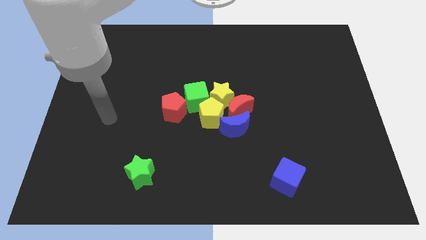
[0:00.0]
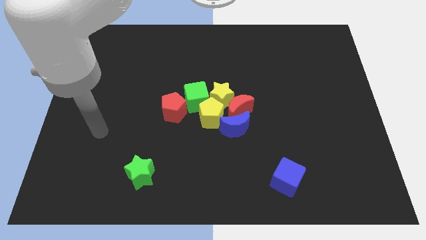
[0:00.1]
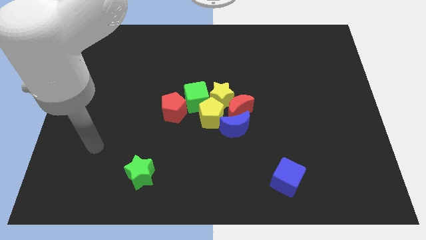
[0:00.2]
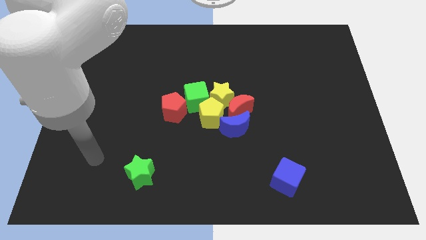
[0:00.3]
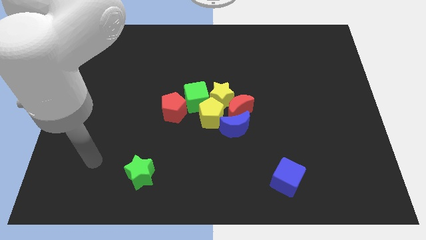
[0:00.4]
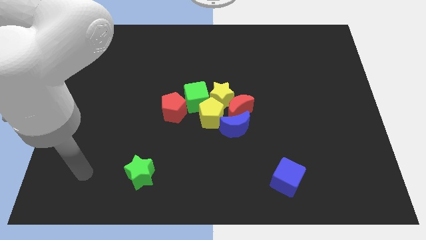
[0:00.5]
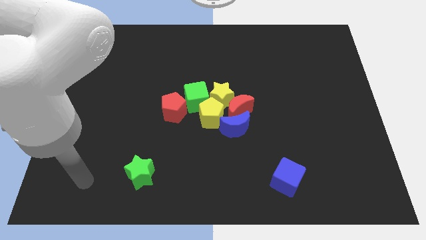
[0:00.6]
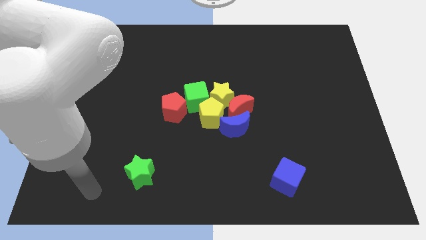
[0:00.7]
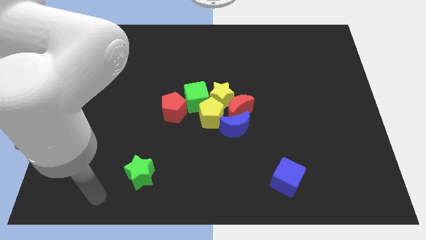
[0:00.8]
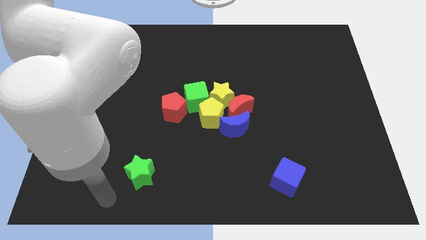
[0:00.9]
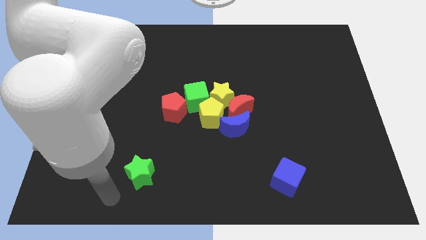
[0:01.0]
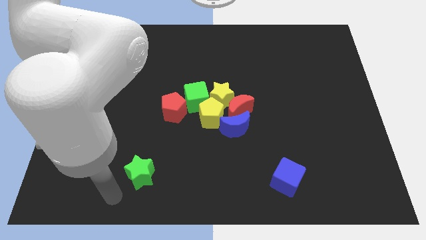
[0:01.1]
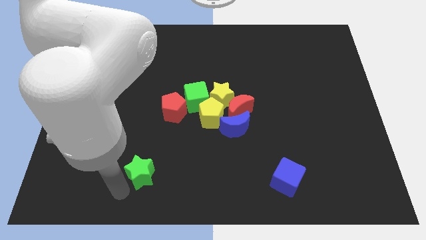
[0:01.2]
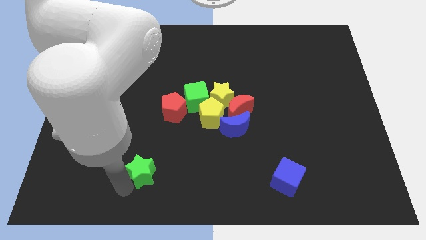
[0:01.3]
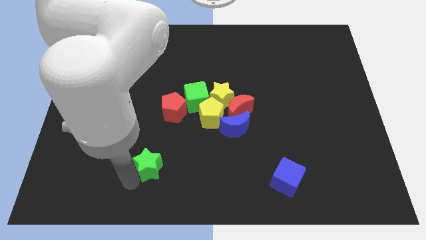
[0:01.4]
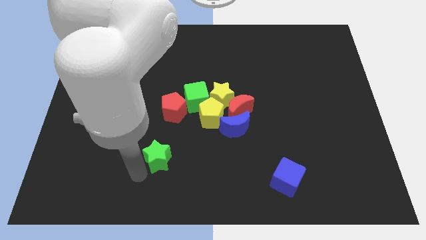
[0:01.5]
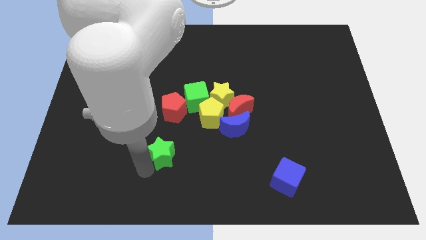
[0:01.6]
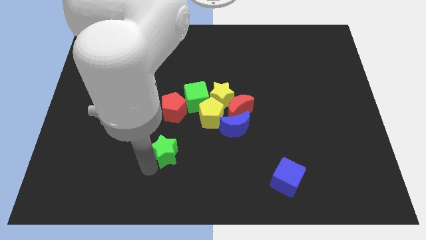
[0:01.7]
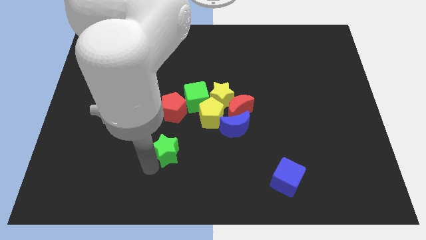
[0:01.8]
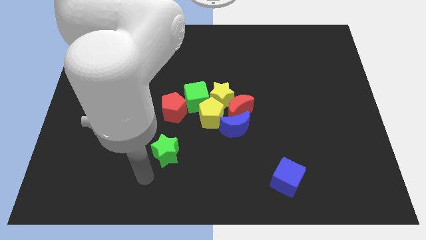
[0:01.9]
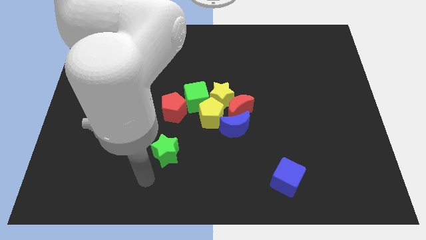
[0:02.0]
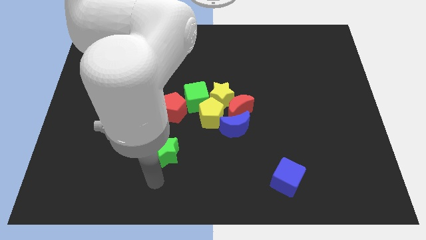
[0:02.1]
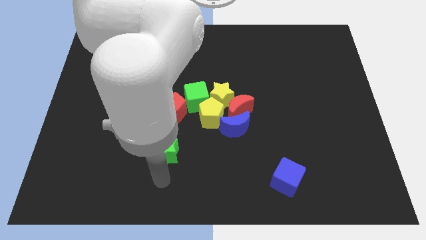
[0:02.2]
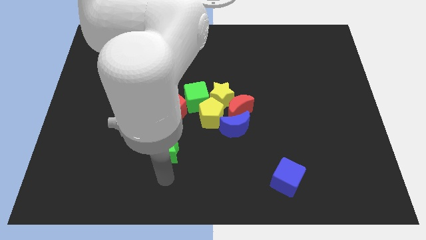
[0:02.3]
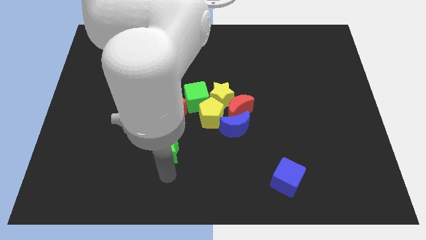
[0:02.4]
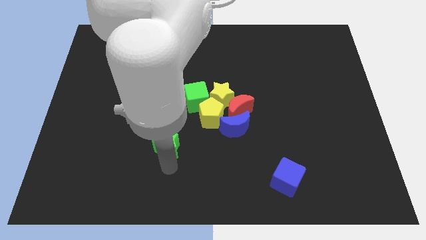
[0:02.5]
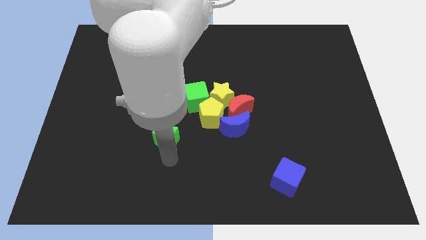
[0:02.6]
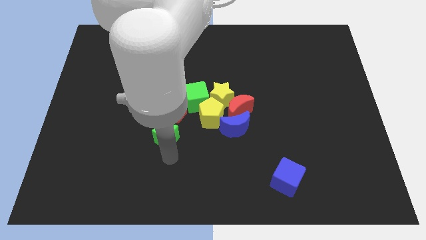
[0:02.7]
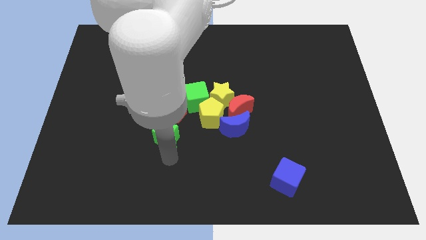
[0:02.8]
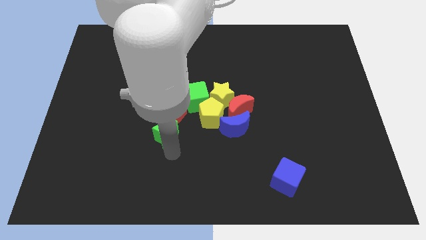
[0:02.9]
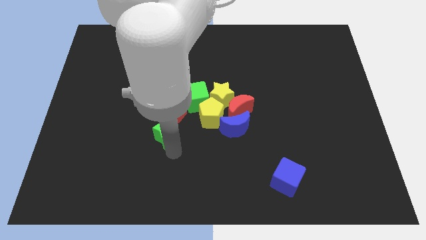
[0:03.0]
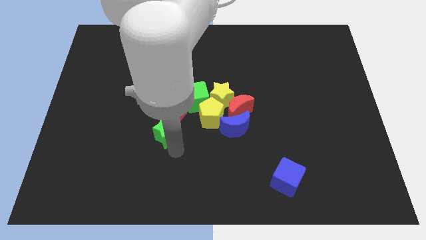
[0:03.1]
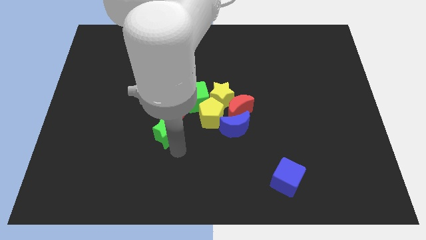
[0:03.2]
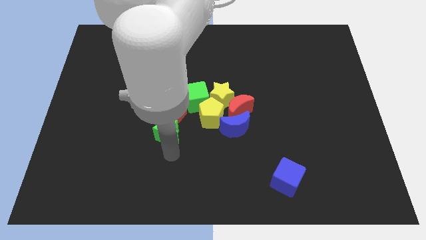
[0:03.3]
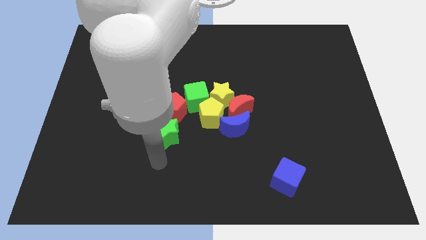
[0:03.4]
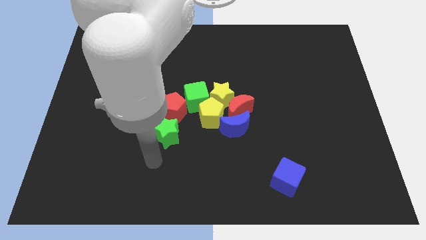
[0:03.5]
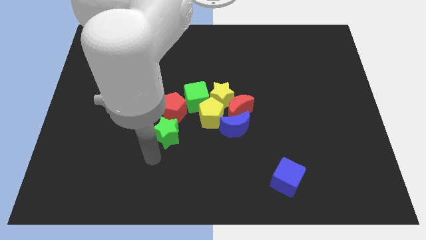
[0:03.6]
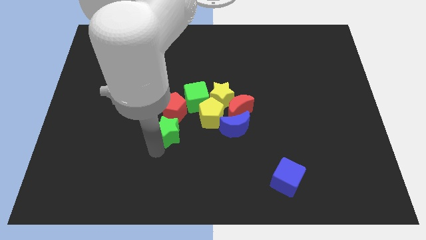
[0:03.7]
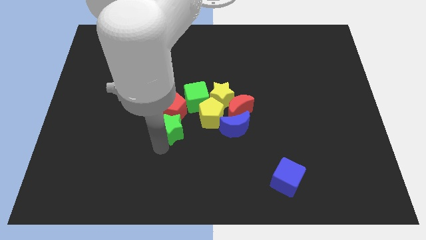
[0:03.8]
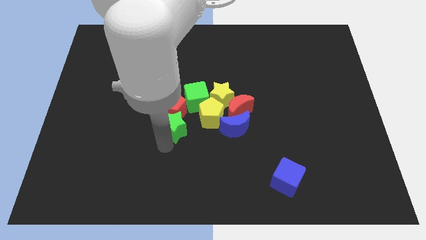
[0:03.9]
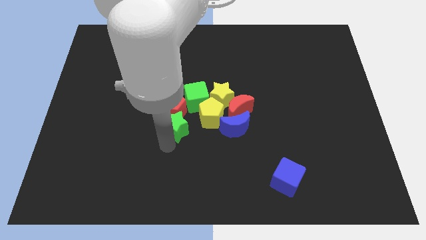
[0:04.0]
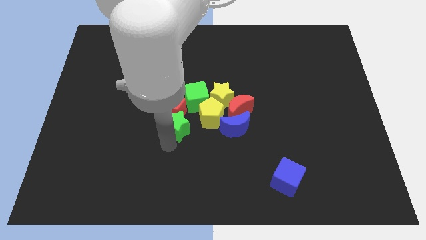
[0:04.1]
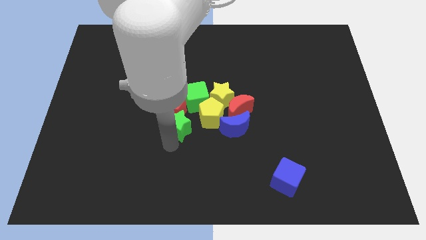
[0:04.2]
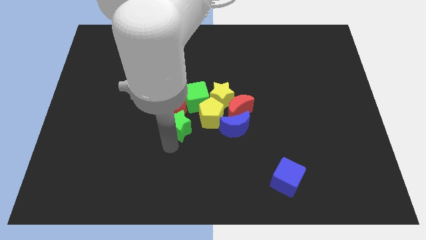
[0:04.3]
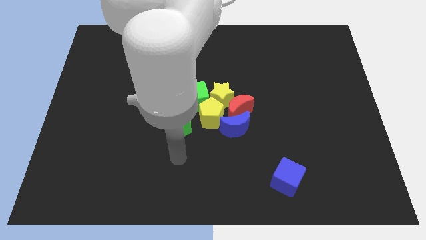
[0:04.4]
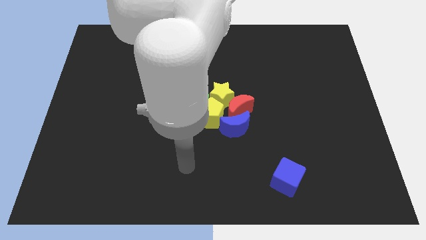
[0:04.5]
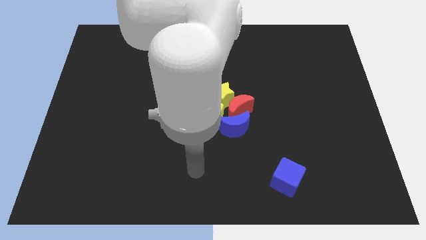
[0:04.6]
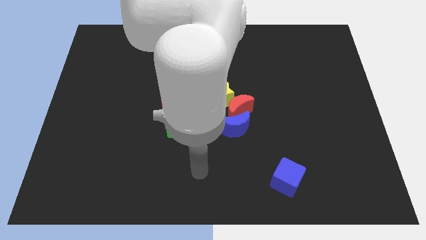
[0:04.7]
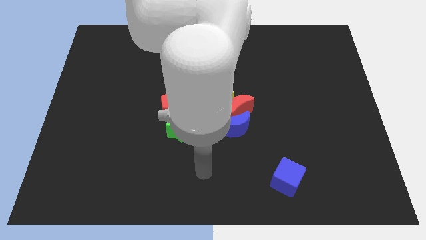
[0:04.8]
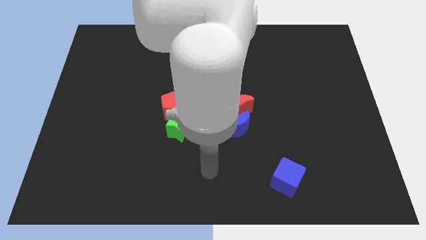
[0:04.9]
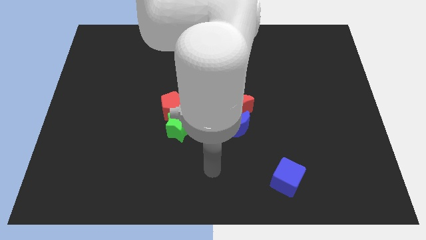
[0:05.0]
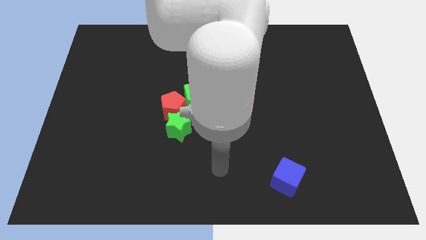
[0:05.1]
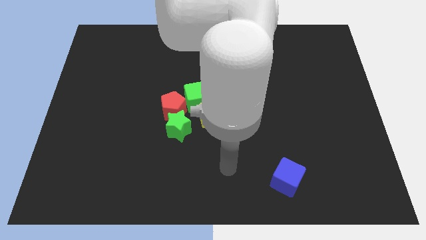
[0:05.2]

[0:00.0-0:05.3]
move the green star into group of blocks

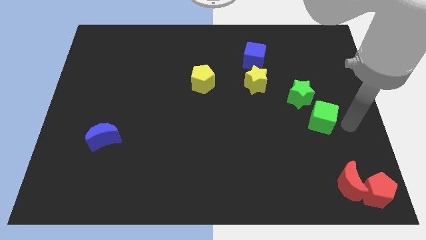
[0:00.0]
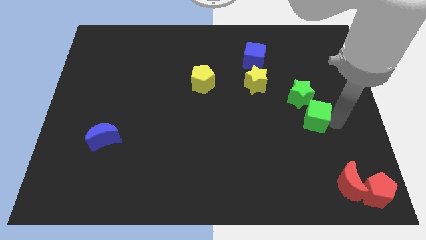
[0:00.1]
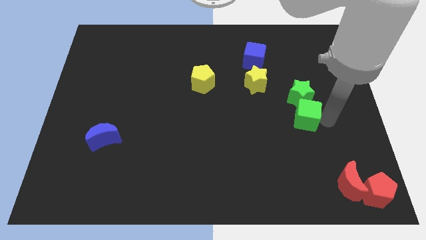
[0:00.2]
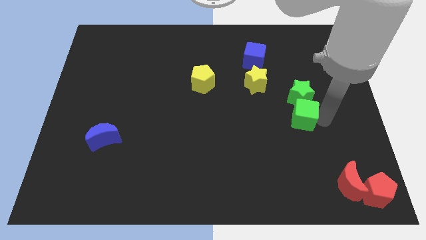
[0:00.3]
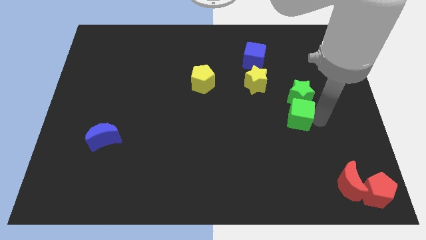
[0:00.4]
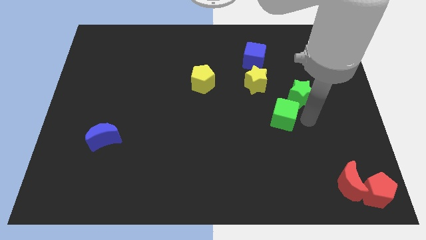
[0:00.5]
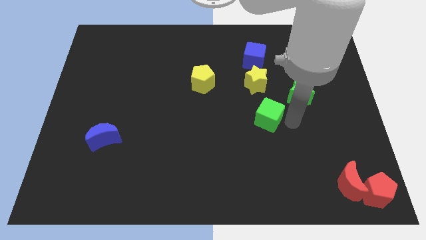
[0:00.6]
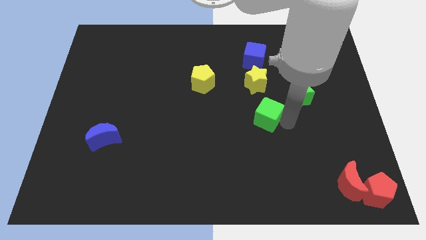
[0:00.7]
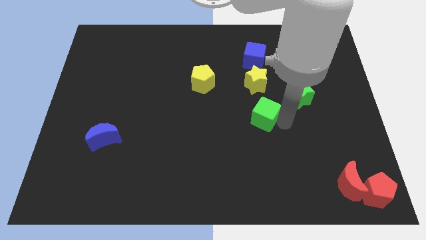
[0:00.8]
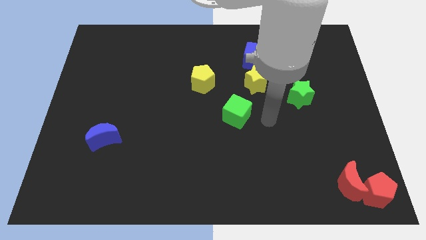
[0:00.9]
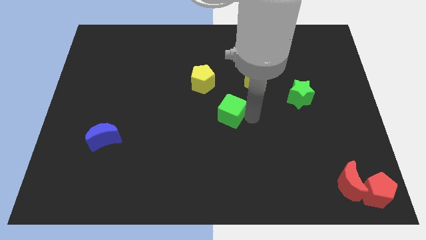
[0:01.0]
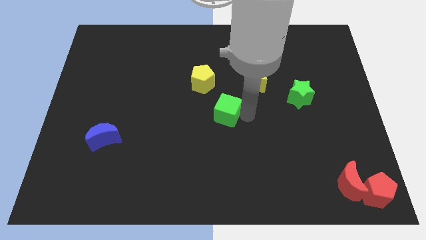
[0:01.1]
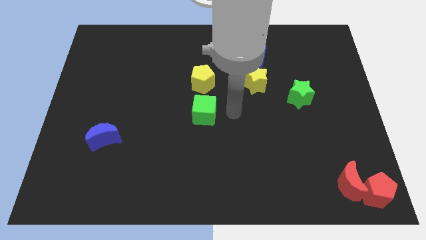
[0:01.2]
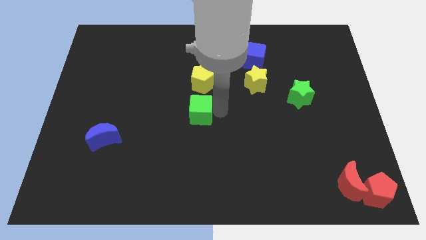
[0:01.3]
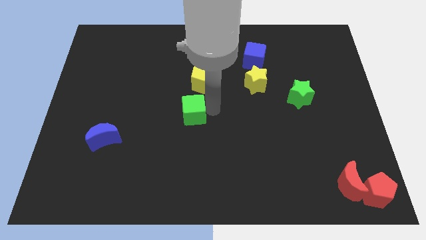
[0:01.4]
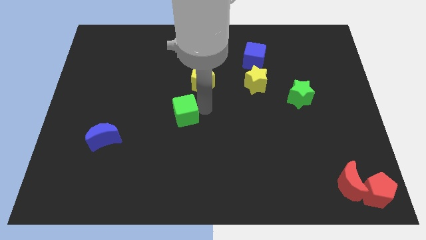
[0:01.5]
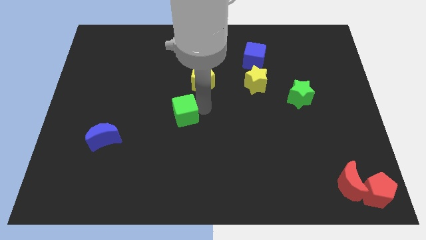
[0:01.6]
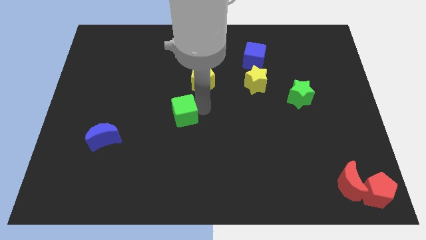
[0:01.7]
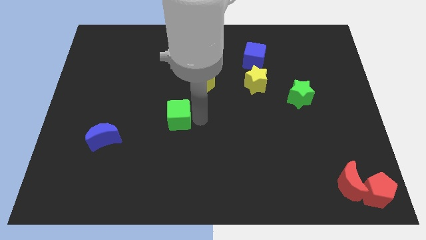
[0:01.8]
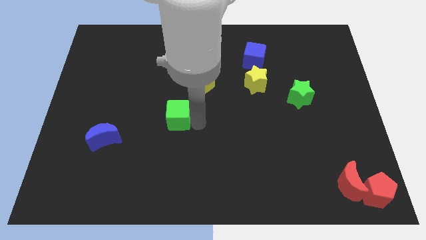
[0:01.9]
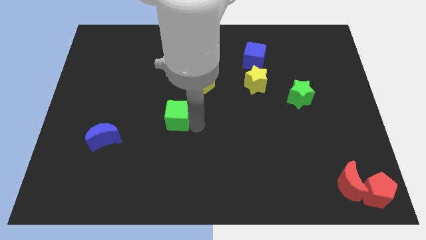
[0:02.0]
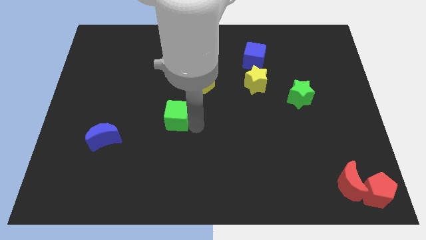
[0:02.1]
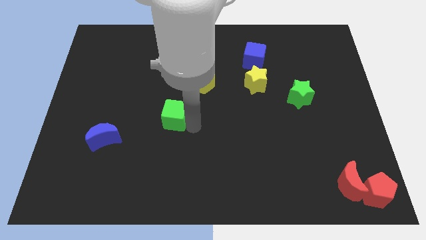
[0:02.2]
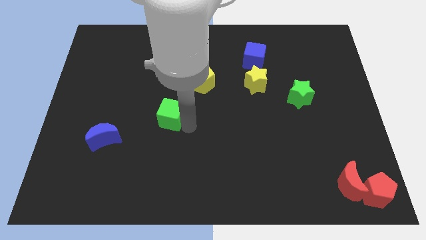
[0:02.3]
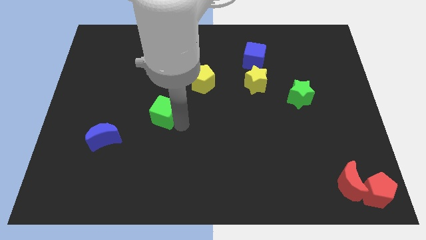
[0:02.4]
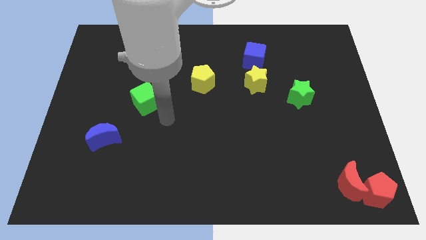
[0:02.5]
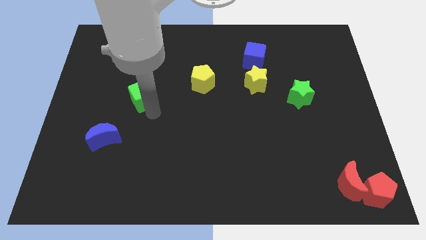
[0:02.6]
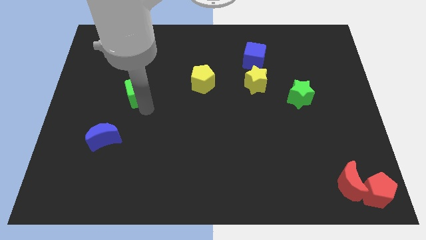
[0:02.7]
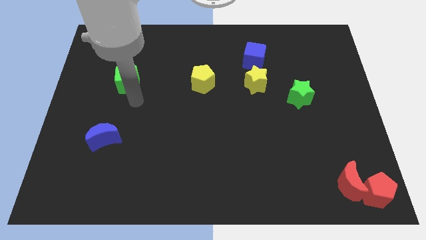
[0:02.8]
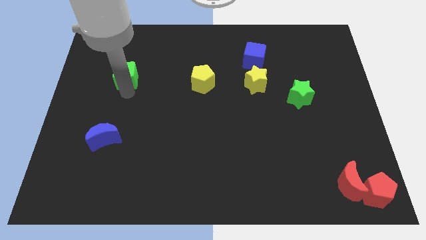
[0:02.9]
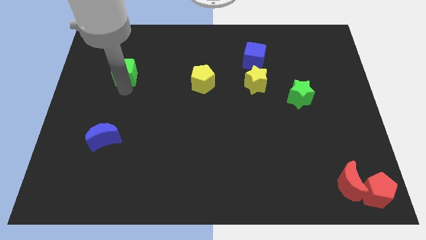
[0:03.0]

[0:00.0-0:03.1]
move the green cube to the left of the yellow pentagon

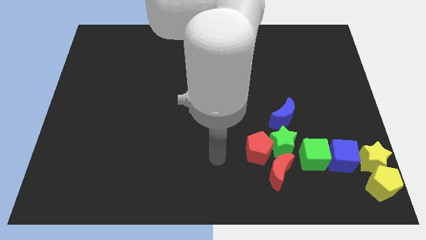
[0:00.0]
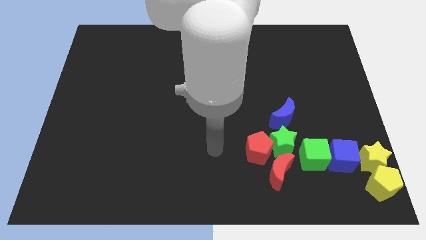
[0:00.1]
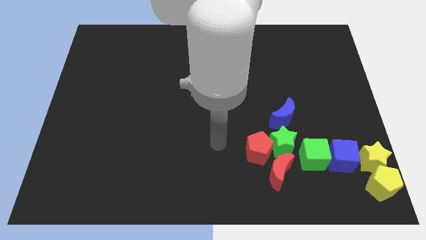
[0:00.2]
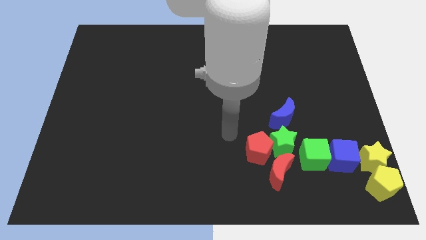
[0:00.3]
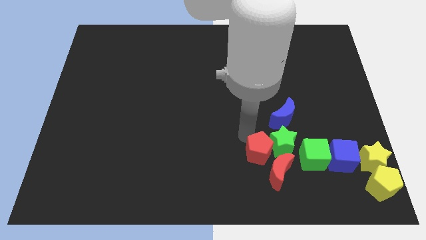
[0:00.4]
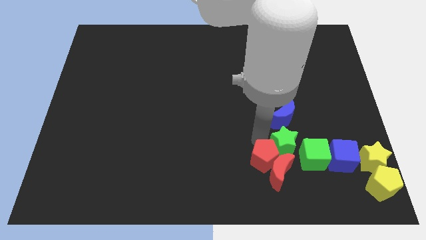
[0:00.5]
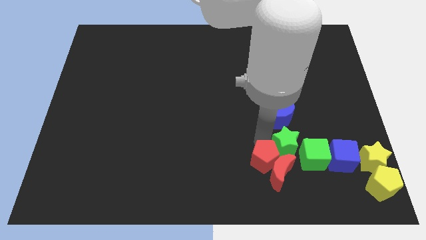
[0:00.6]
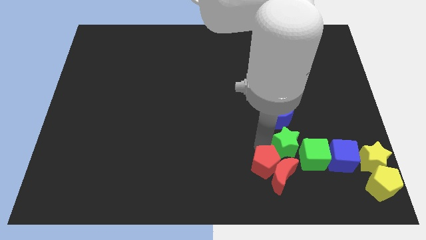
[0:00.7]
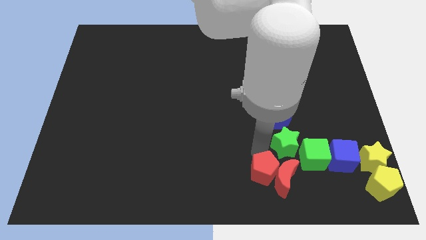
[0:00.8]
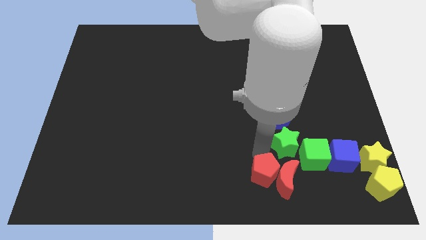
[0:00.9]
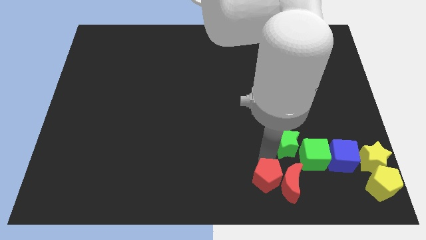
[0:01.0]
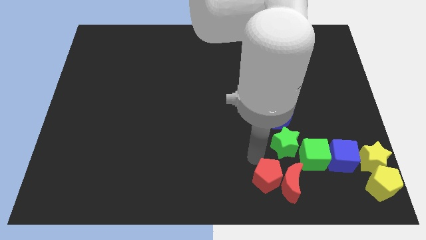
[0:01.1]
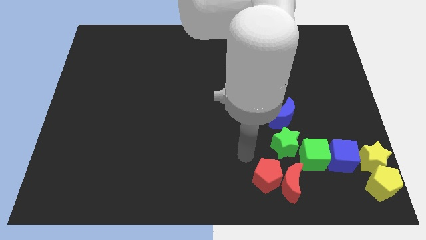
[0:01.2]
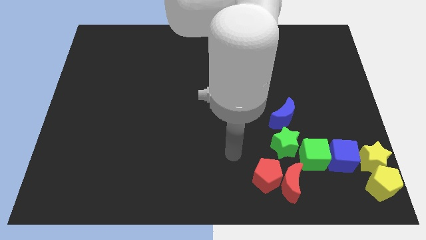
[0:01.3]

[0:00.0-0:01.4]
push the red pentagon diagonally to the bottom left of the green star
